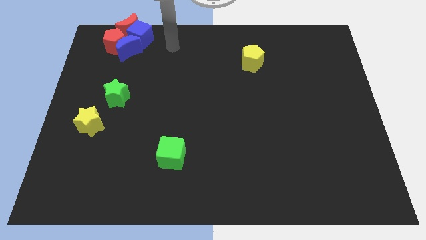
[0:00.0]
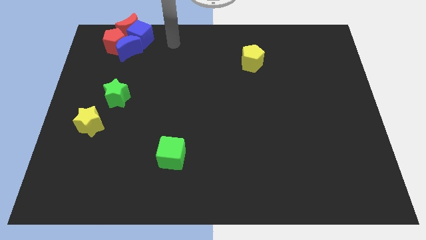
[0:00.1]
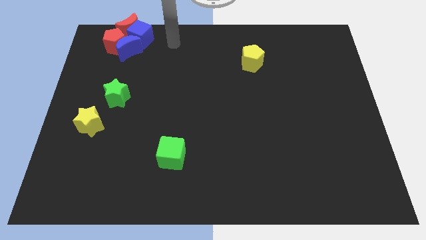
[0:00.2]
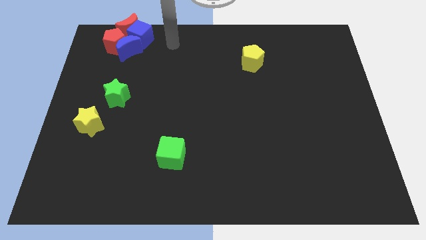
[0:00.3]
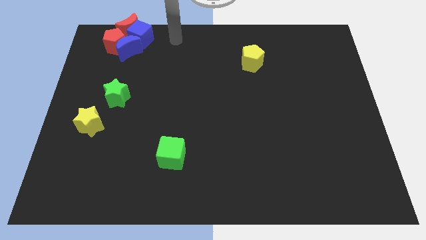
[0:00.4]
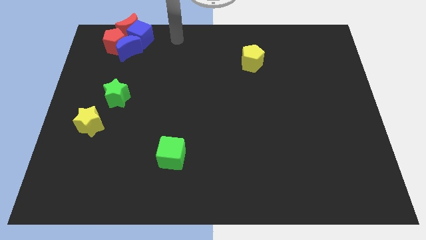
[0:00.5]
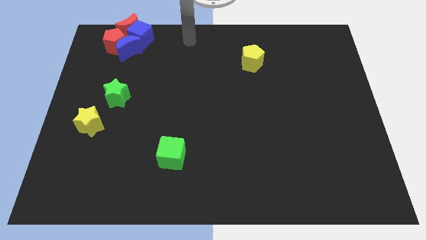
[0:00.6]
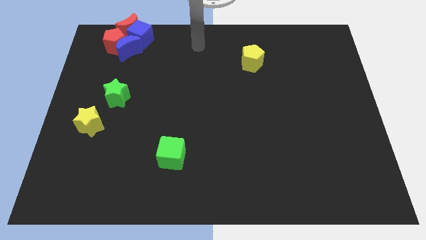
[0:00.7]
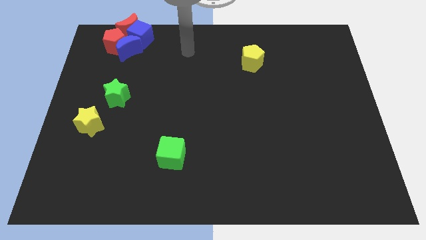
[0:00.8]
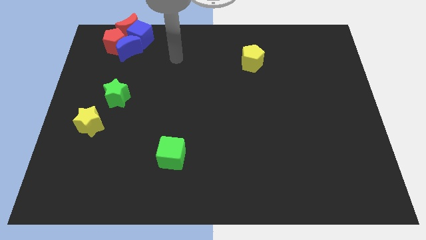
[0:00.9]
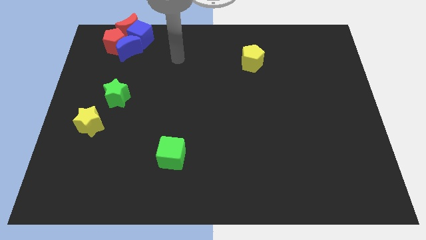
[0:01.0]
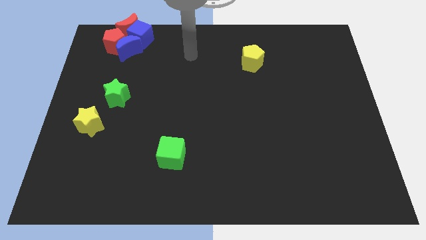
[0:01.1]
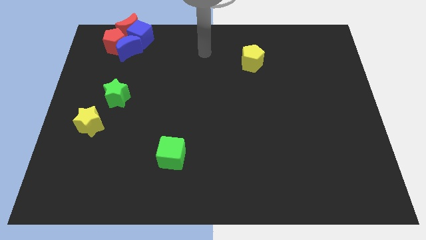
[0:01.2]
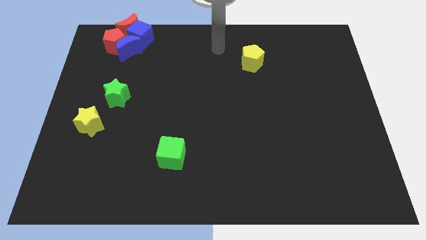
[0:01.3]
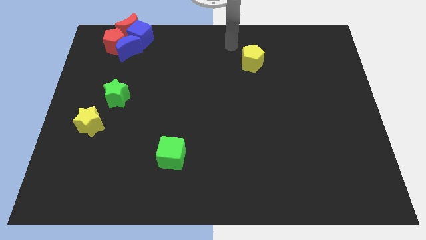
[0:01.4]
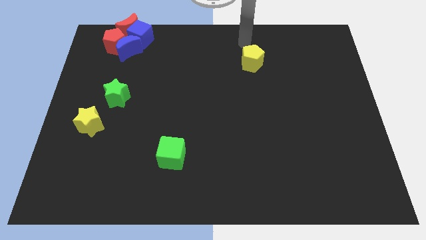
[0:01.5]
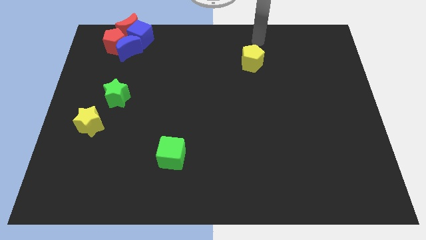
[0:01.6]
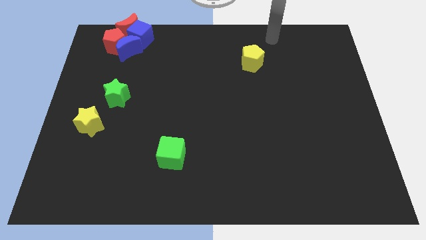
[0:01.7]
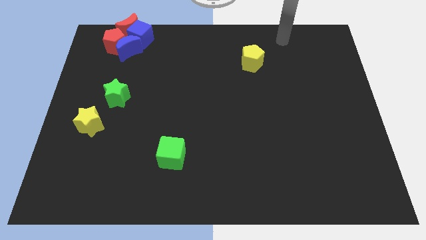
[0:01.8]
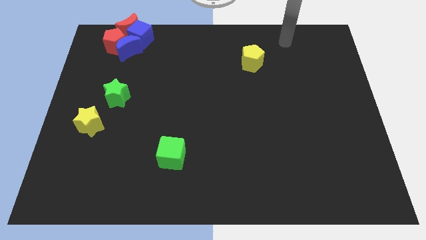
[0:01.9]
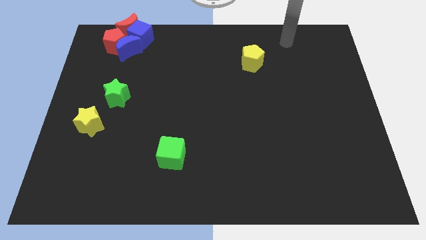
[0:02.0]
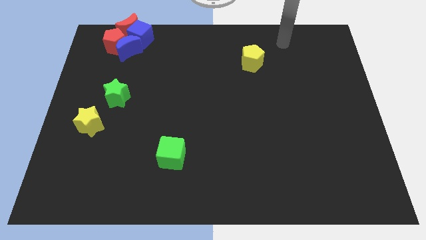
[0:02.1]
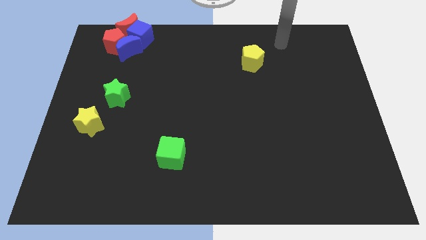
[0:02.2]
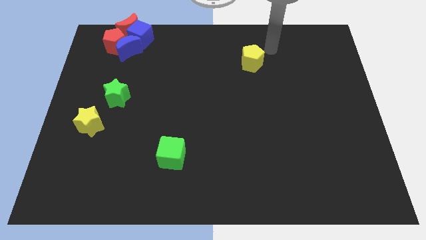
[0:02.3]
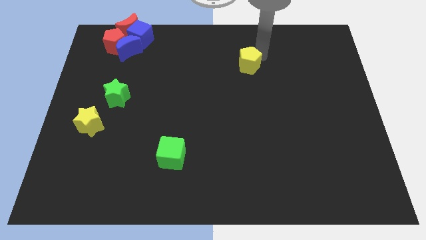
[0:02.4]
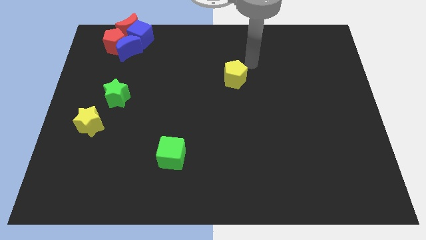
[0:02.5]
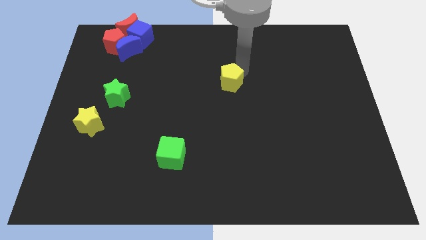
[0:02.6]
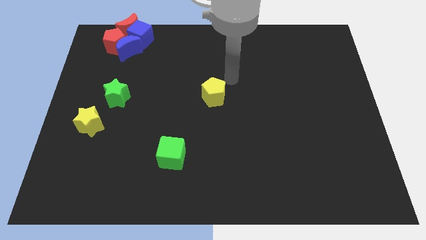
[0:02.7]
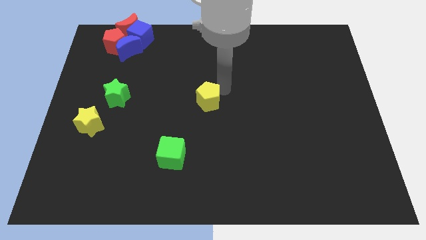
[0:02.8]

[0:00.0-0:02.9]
push the yellow pentagon towards the center of the board

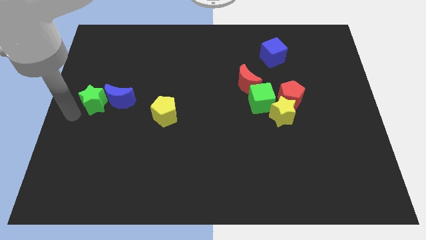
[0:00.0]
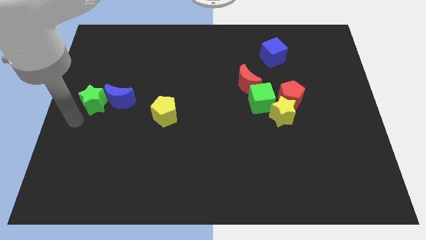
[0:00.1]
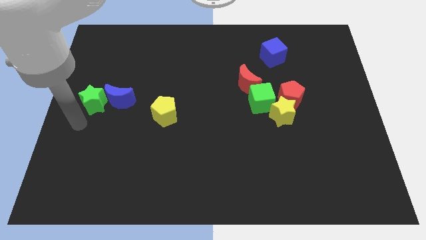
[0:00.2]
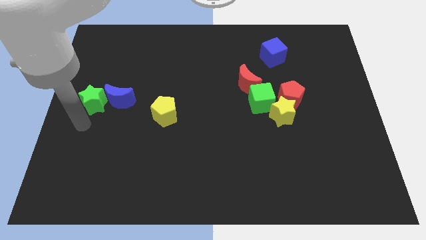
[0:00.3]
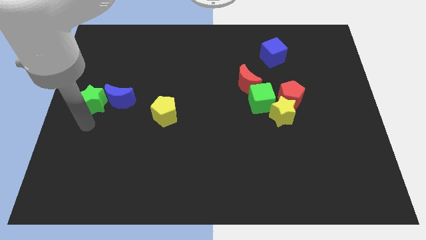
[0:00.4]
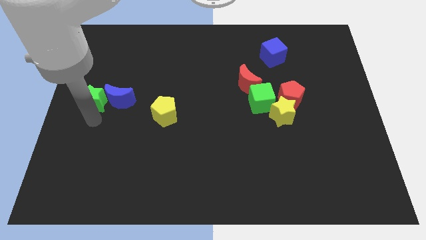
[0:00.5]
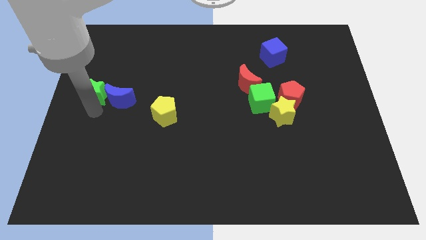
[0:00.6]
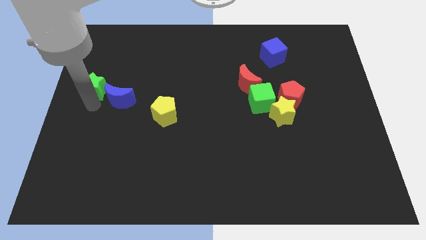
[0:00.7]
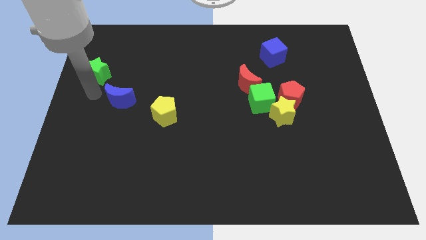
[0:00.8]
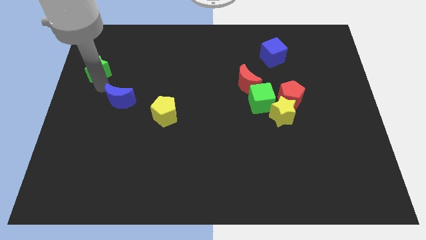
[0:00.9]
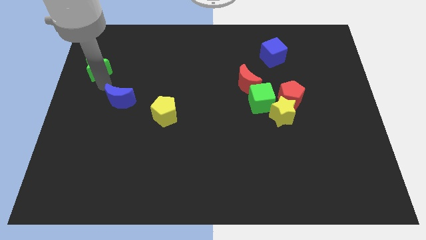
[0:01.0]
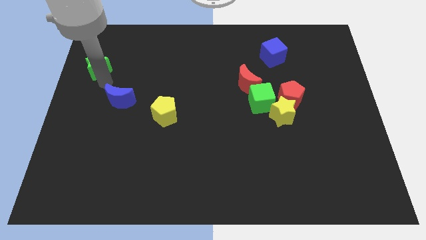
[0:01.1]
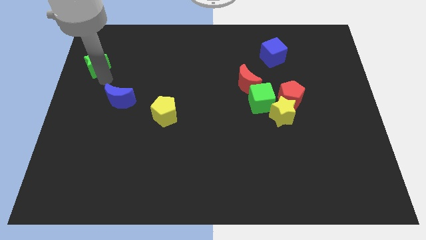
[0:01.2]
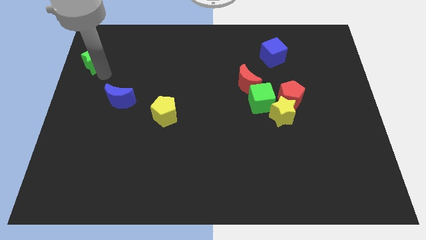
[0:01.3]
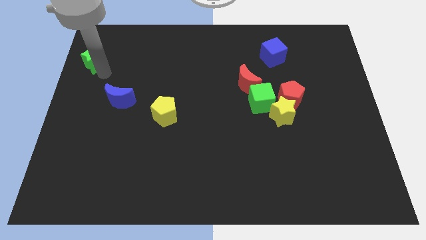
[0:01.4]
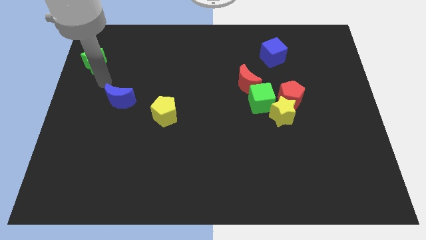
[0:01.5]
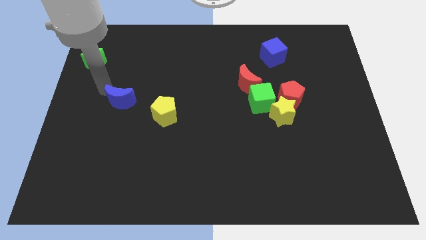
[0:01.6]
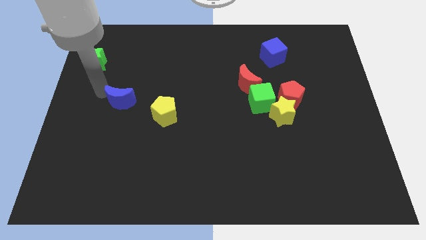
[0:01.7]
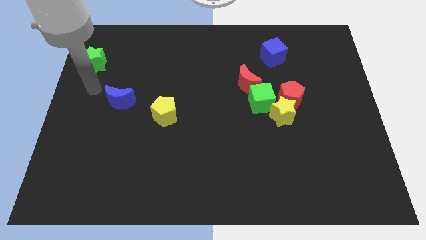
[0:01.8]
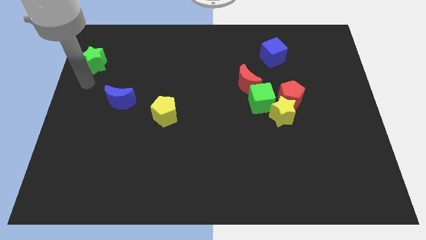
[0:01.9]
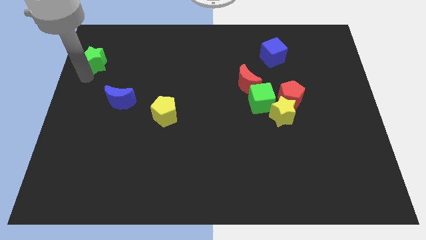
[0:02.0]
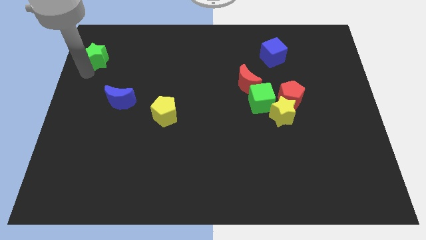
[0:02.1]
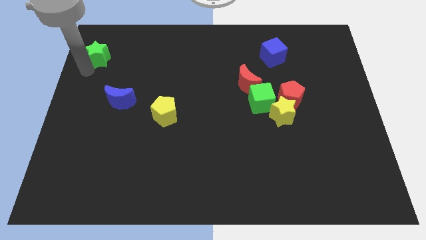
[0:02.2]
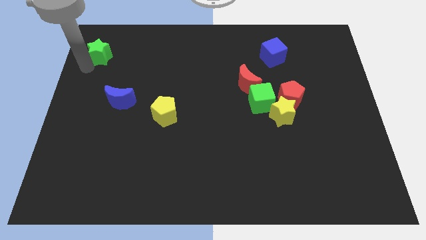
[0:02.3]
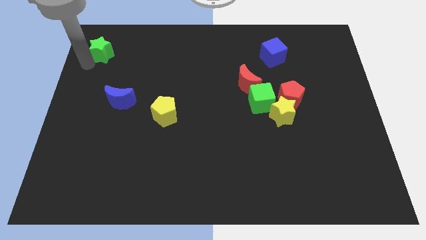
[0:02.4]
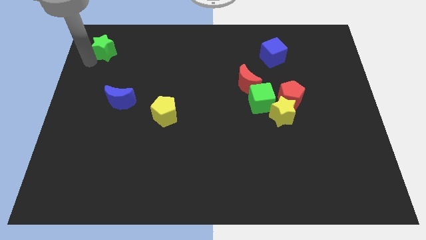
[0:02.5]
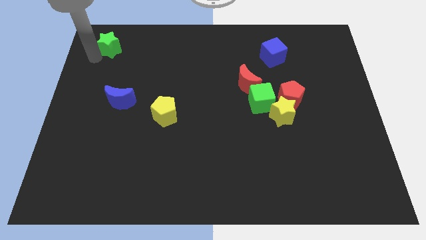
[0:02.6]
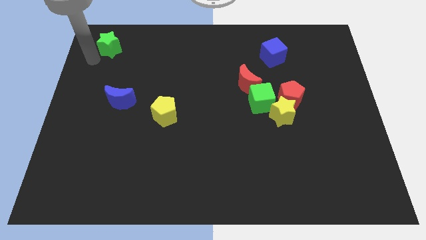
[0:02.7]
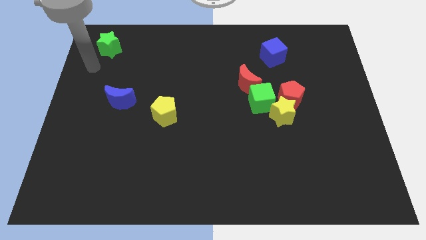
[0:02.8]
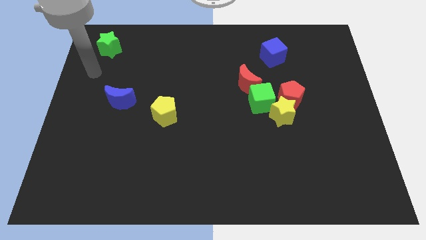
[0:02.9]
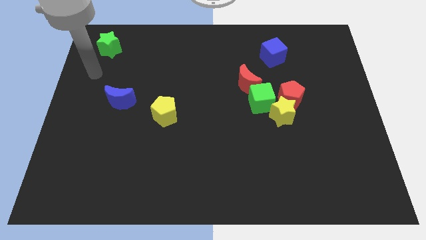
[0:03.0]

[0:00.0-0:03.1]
separate green star from blue moon

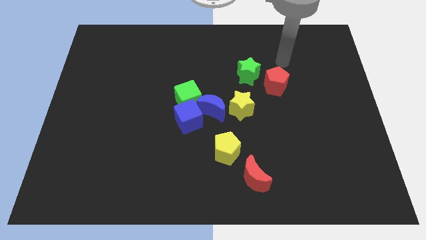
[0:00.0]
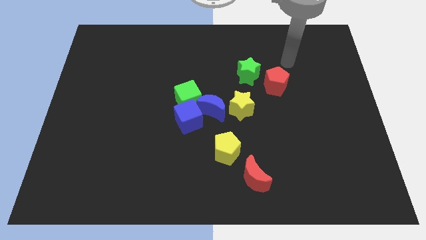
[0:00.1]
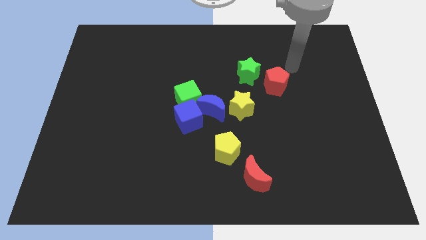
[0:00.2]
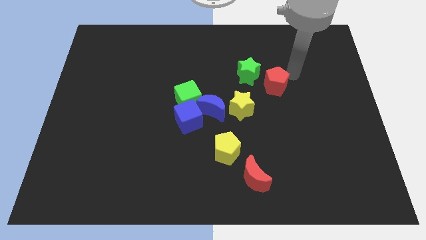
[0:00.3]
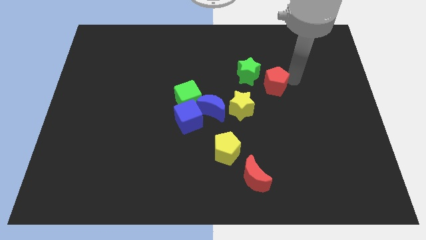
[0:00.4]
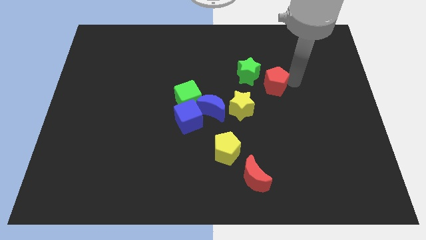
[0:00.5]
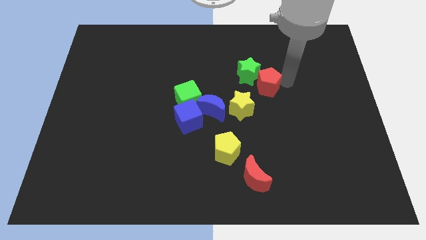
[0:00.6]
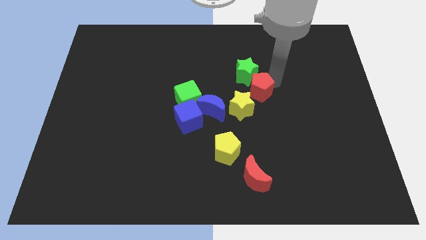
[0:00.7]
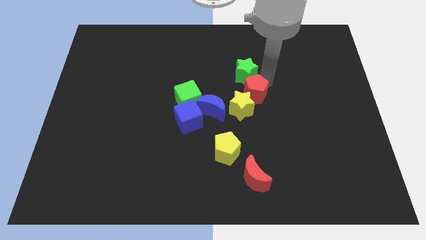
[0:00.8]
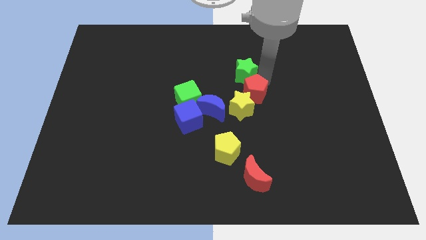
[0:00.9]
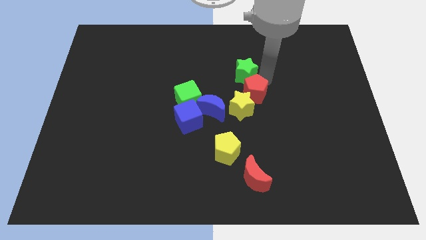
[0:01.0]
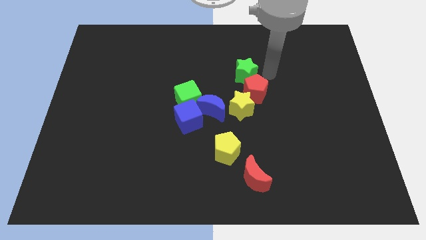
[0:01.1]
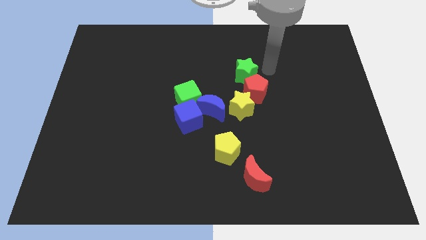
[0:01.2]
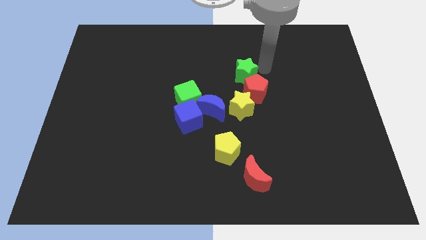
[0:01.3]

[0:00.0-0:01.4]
push the red pentagon slightly towards the yellow star

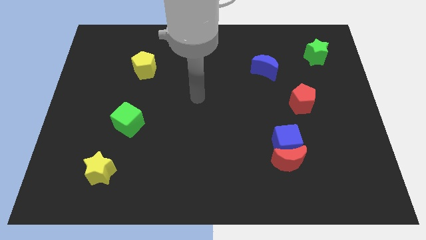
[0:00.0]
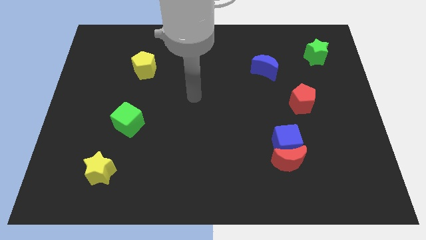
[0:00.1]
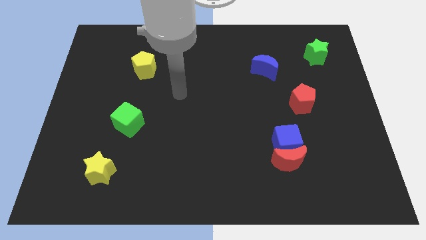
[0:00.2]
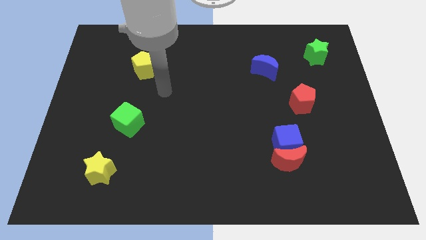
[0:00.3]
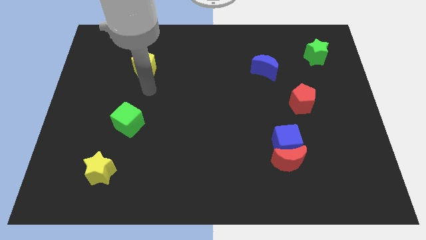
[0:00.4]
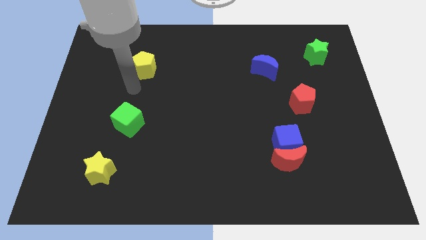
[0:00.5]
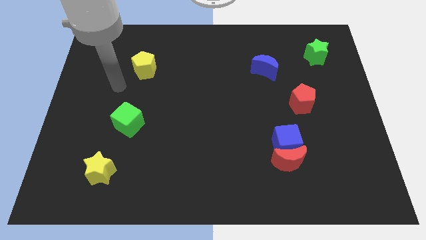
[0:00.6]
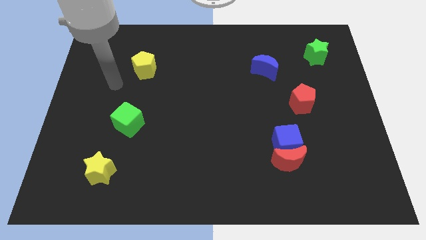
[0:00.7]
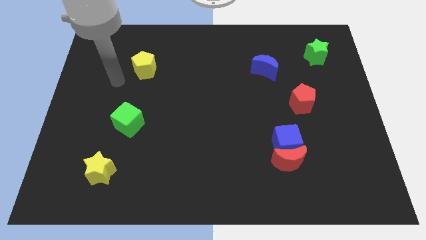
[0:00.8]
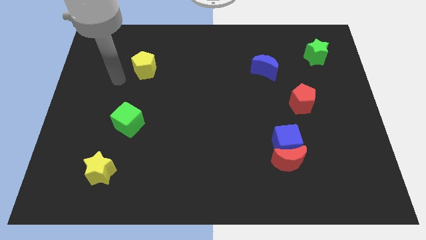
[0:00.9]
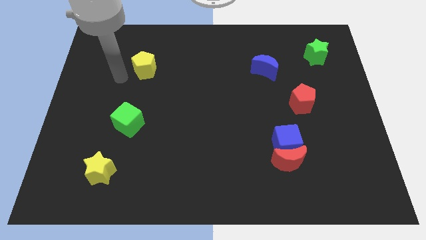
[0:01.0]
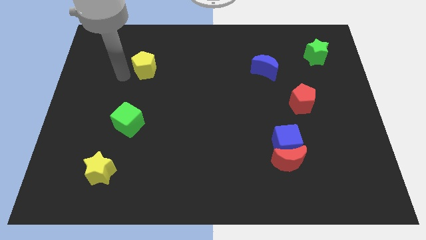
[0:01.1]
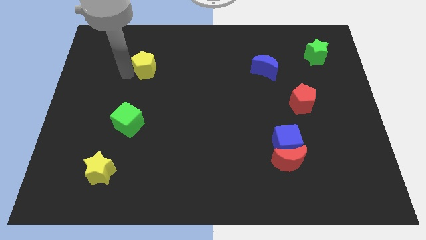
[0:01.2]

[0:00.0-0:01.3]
point your arm at the left of the yellow pentagon

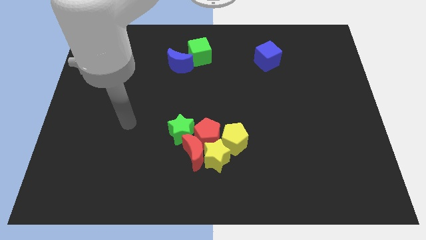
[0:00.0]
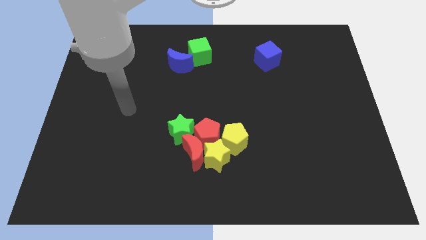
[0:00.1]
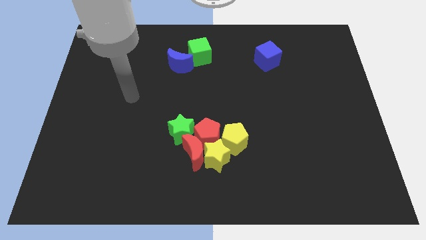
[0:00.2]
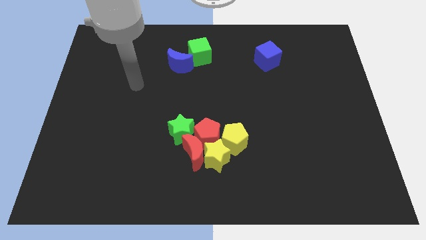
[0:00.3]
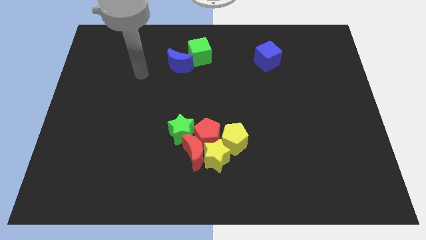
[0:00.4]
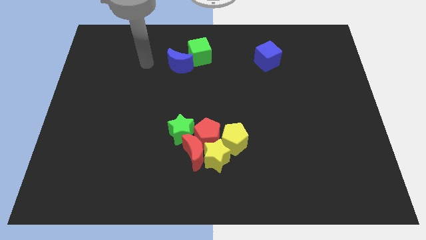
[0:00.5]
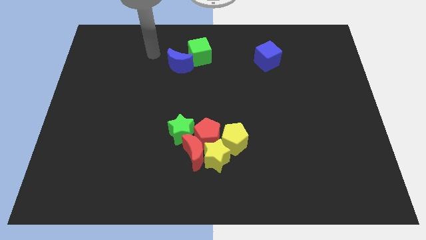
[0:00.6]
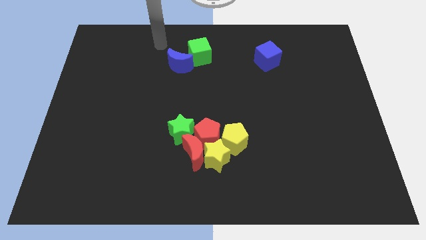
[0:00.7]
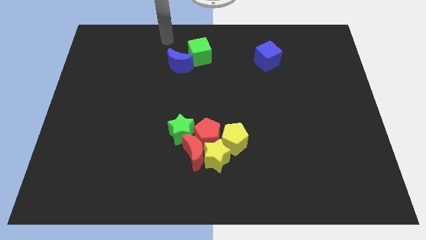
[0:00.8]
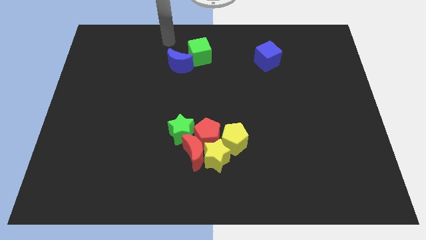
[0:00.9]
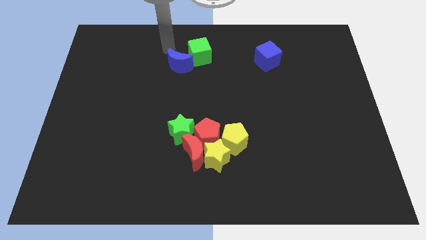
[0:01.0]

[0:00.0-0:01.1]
place your arm to the top of blue moon
